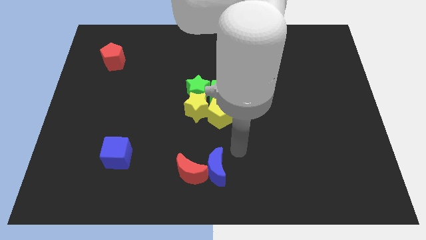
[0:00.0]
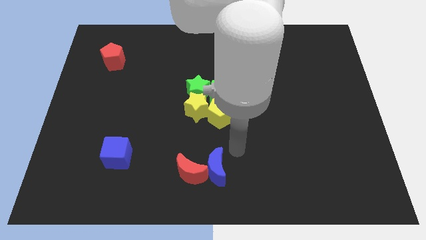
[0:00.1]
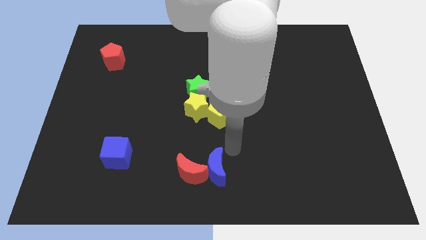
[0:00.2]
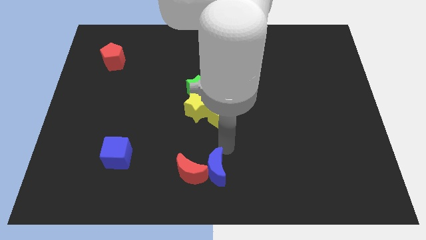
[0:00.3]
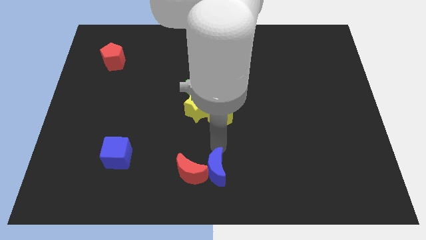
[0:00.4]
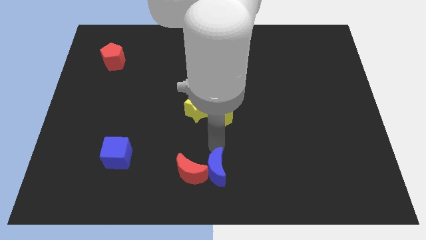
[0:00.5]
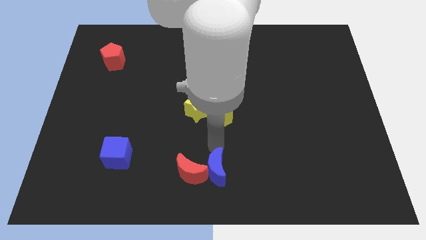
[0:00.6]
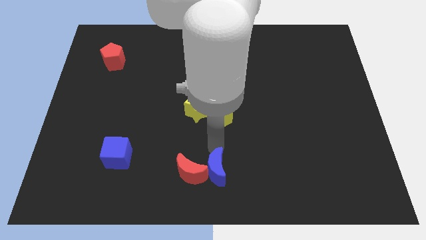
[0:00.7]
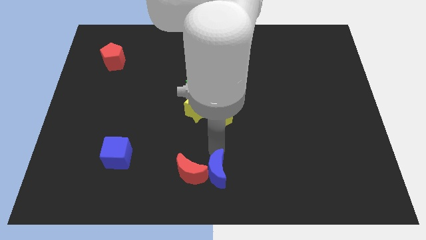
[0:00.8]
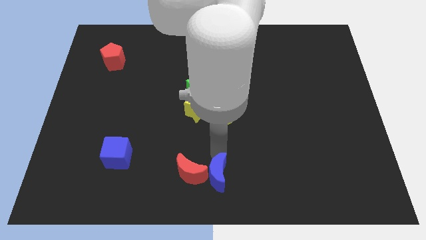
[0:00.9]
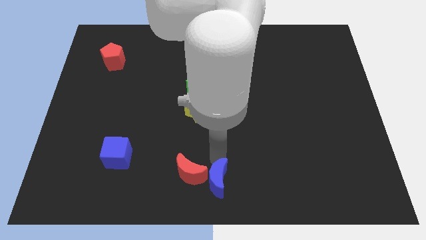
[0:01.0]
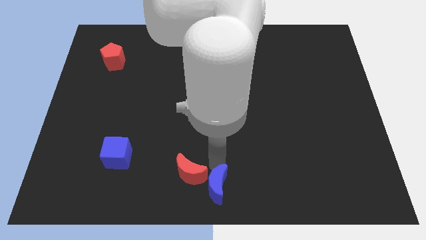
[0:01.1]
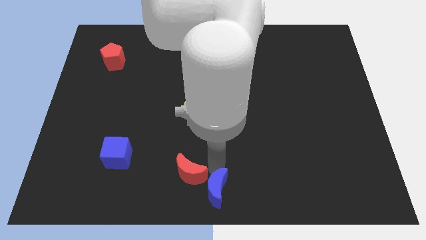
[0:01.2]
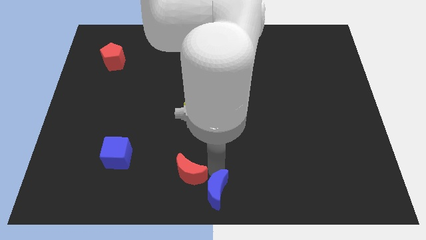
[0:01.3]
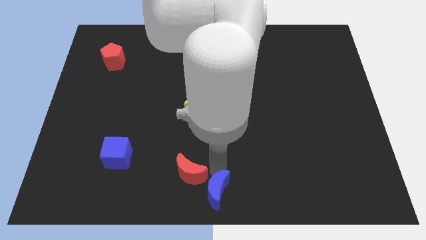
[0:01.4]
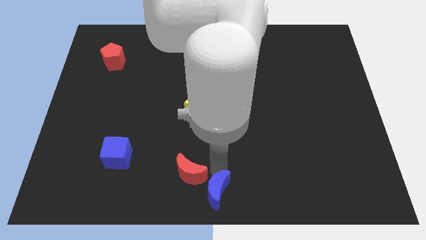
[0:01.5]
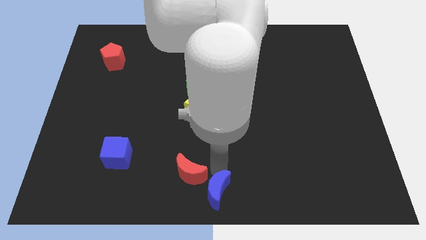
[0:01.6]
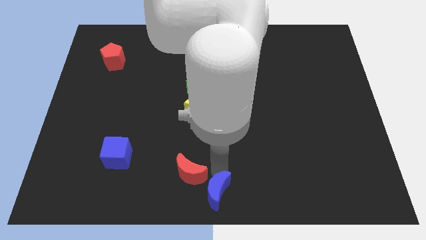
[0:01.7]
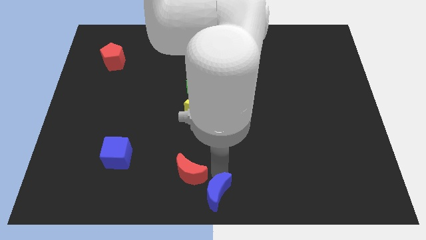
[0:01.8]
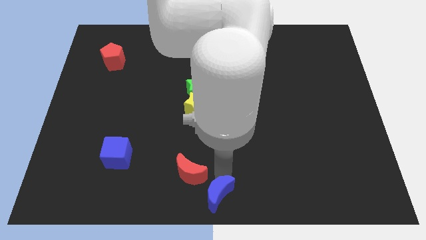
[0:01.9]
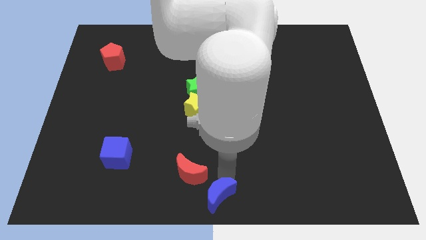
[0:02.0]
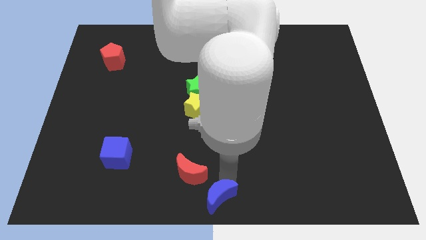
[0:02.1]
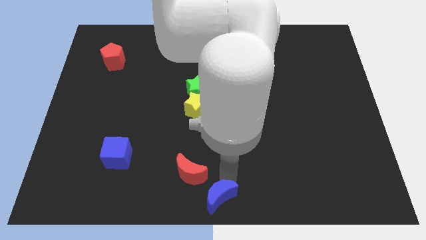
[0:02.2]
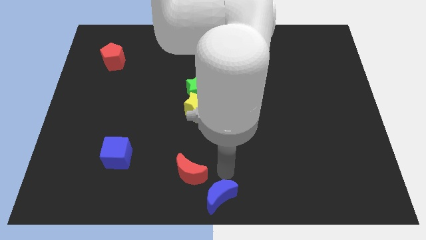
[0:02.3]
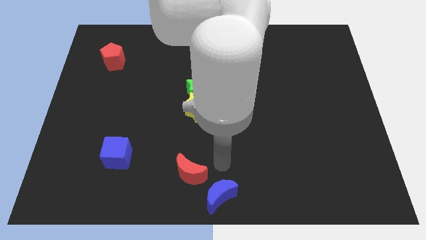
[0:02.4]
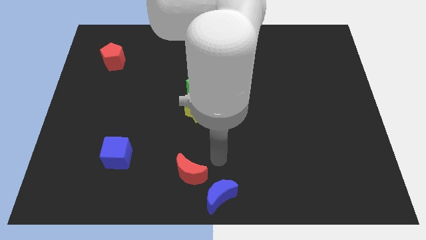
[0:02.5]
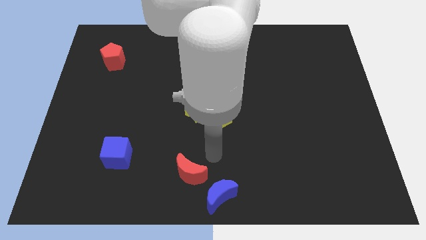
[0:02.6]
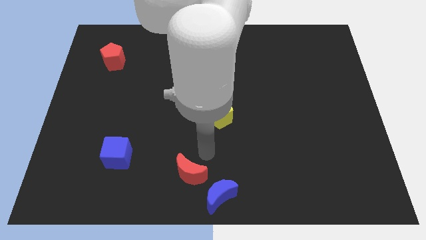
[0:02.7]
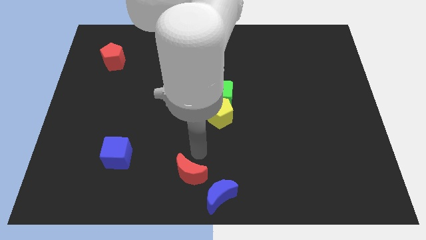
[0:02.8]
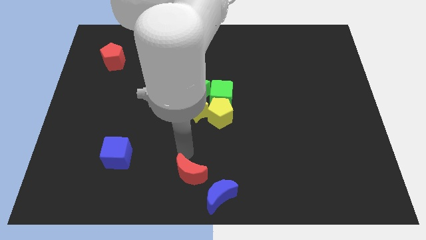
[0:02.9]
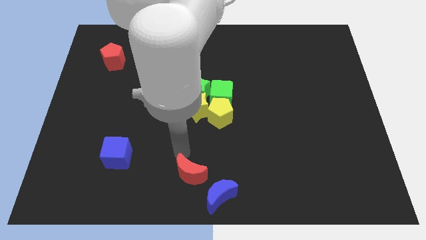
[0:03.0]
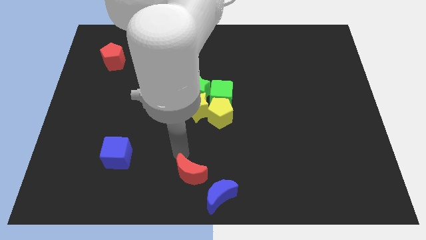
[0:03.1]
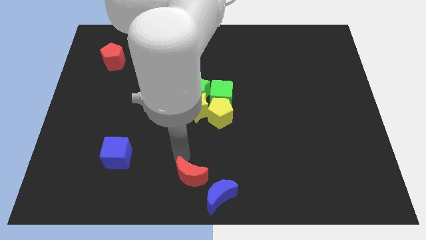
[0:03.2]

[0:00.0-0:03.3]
slightly push the blue moon to the bottom center

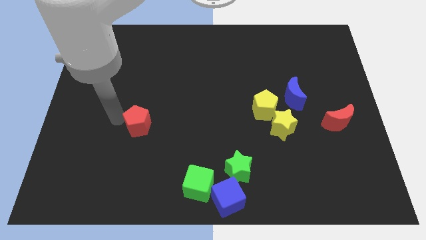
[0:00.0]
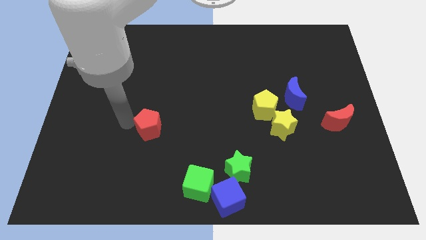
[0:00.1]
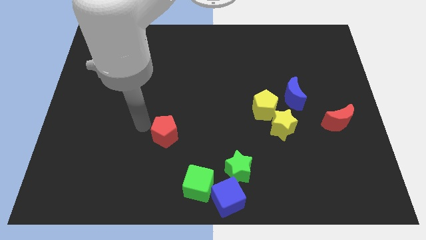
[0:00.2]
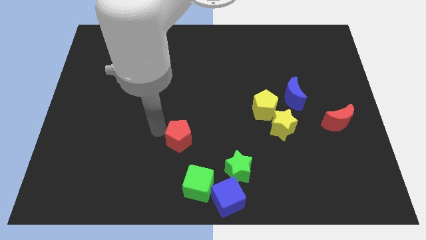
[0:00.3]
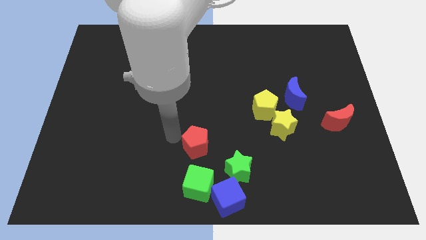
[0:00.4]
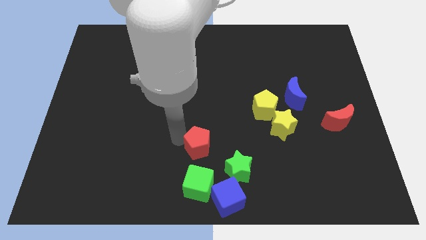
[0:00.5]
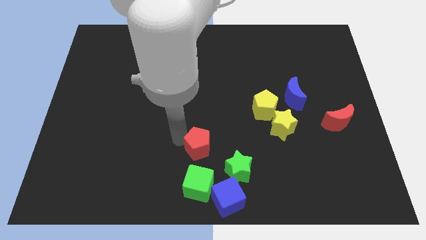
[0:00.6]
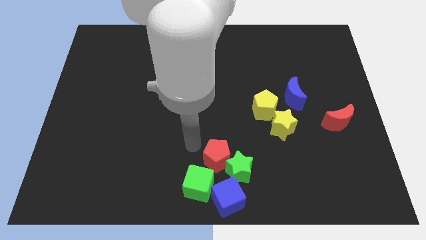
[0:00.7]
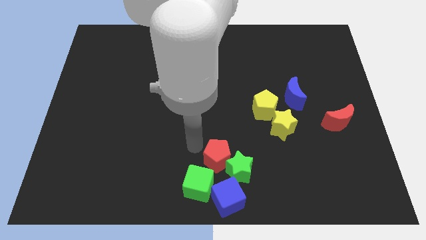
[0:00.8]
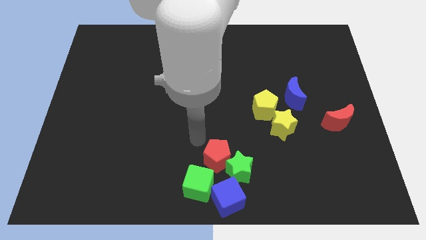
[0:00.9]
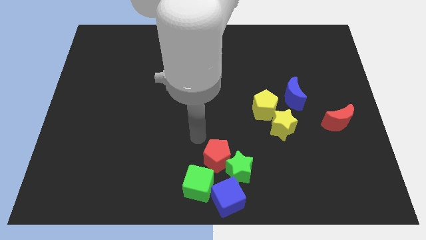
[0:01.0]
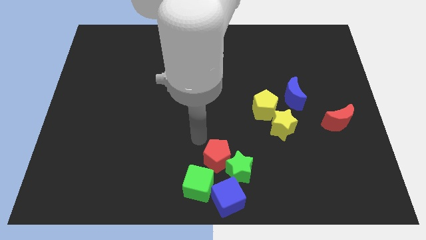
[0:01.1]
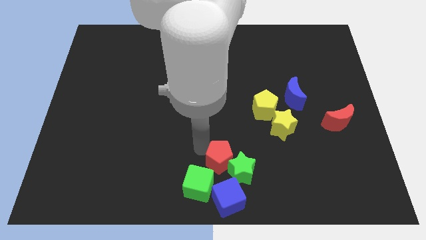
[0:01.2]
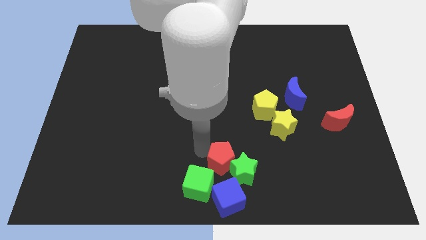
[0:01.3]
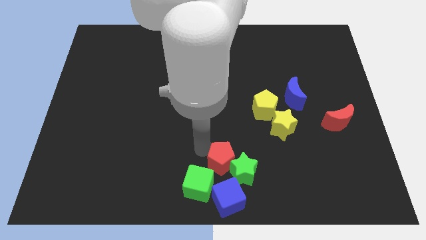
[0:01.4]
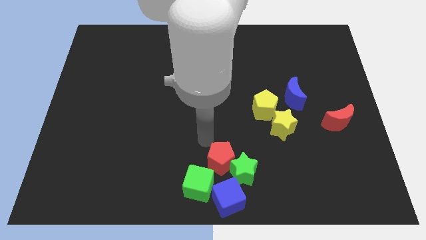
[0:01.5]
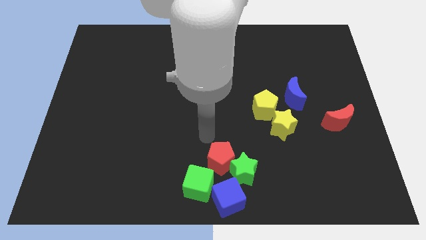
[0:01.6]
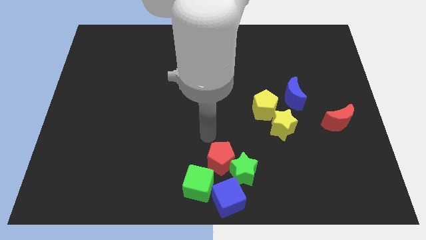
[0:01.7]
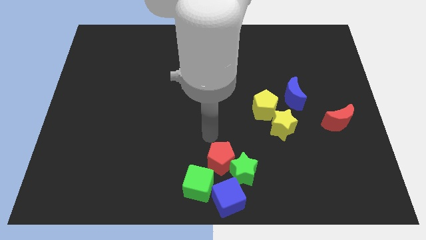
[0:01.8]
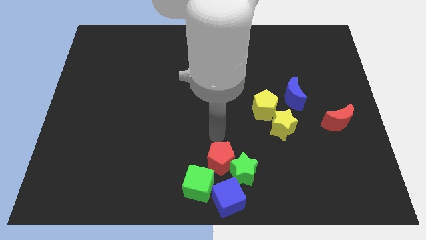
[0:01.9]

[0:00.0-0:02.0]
push the red pentagon into the green star

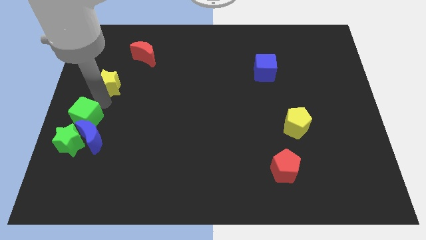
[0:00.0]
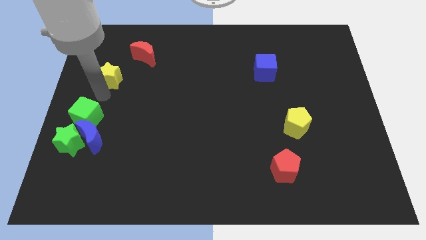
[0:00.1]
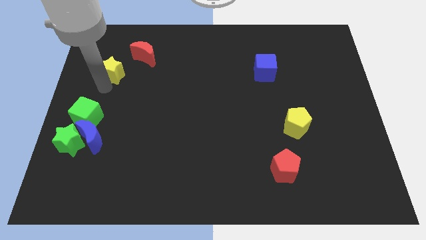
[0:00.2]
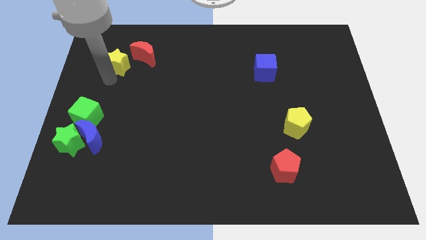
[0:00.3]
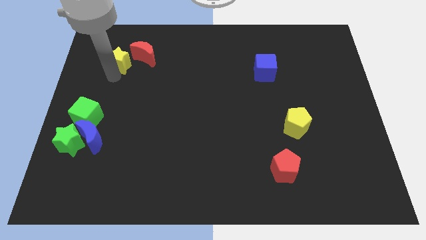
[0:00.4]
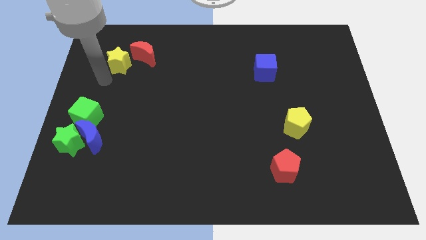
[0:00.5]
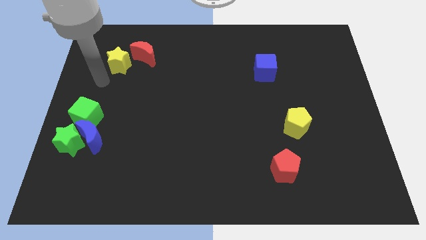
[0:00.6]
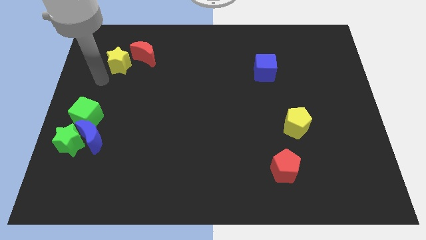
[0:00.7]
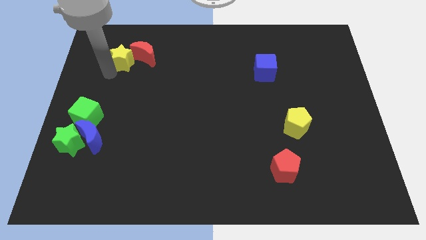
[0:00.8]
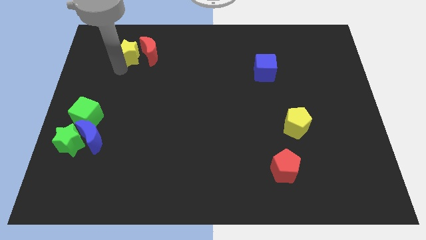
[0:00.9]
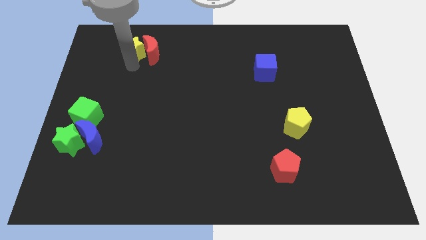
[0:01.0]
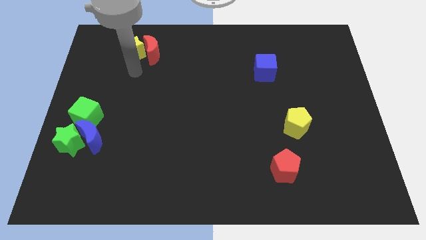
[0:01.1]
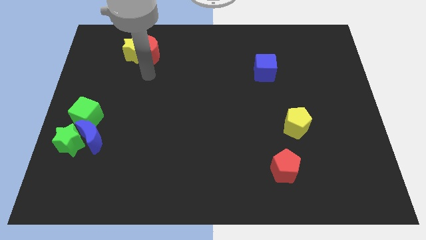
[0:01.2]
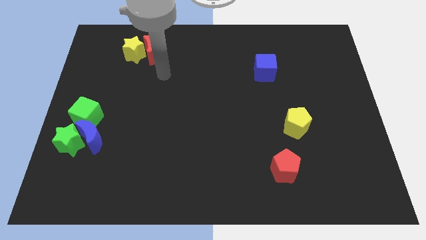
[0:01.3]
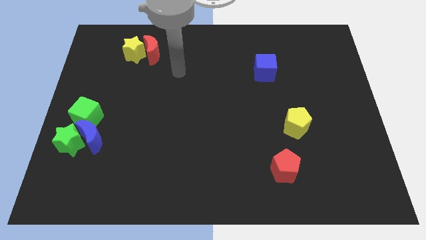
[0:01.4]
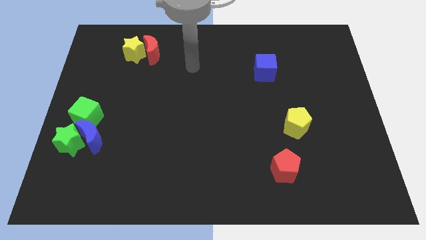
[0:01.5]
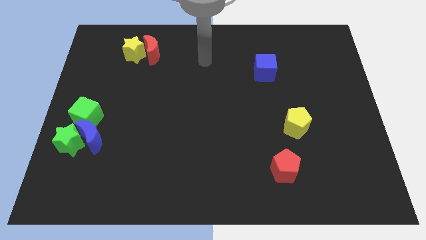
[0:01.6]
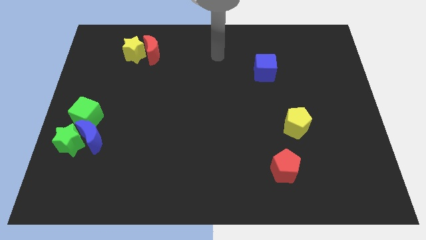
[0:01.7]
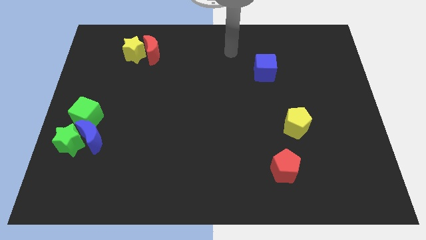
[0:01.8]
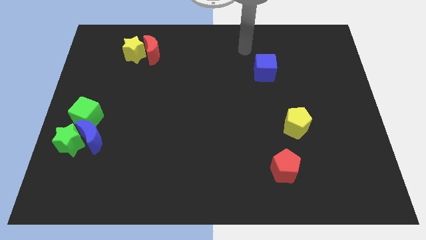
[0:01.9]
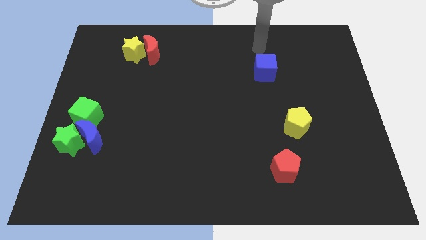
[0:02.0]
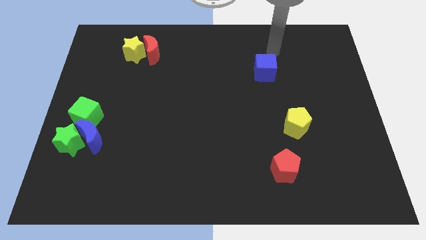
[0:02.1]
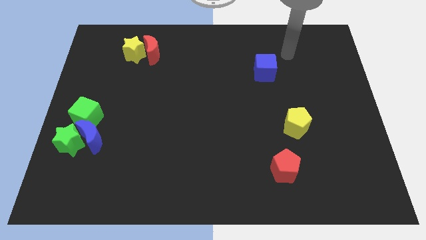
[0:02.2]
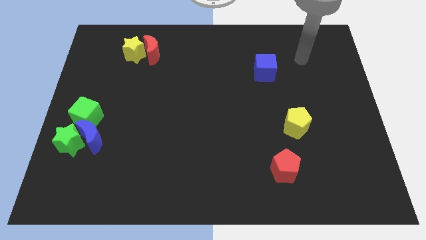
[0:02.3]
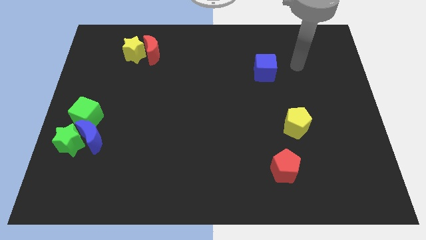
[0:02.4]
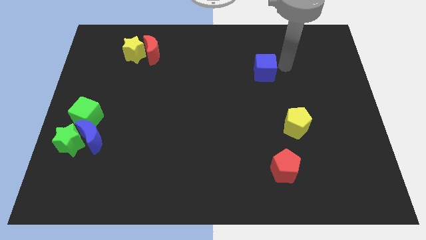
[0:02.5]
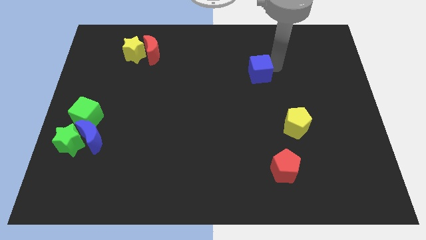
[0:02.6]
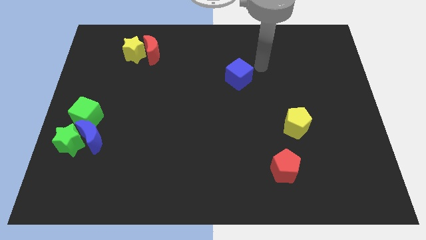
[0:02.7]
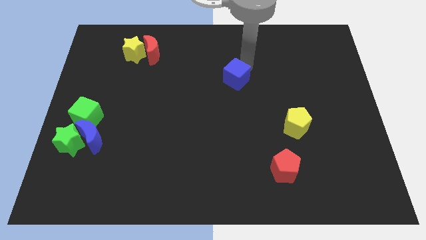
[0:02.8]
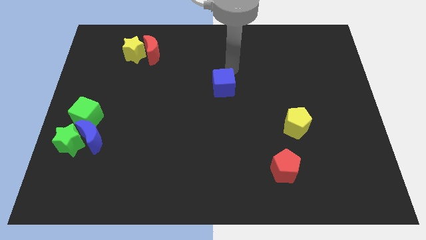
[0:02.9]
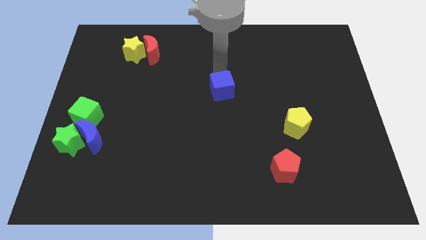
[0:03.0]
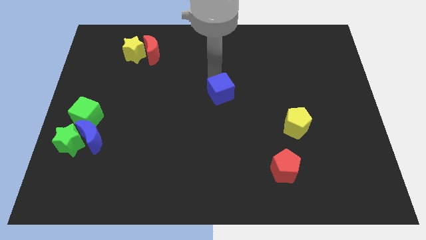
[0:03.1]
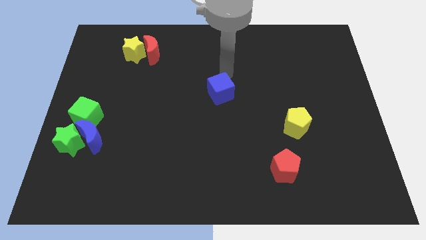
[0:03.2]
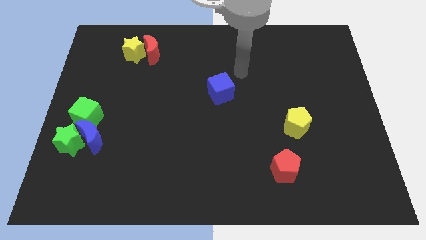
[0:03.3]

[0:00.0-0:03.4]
place the yellow star to the left of red moon

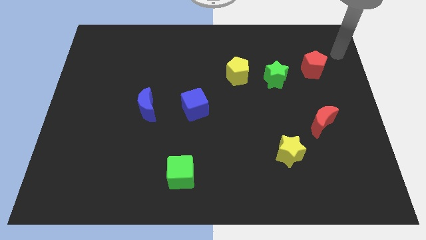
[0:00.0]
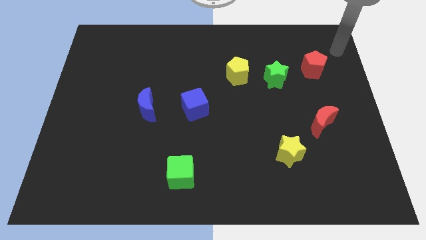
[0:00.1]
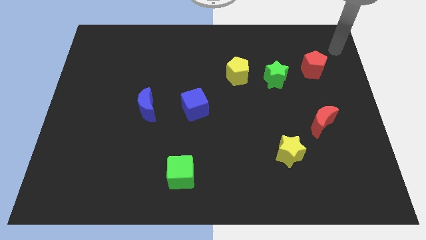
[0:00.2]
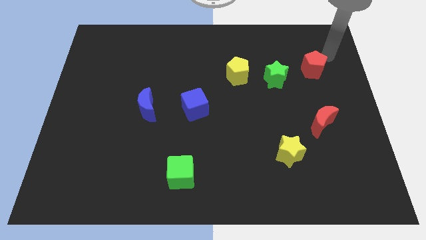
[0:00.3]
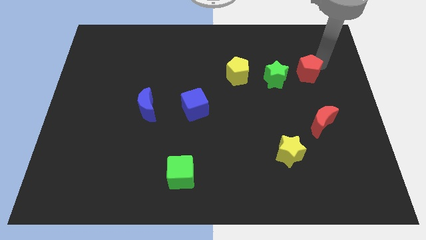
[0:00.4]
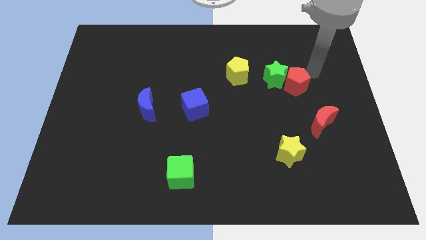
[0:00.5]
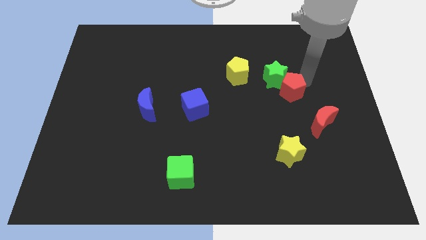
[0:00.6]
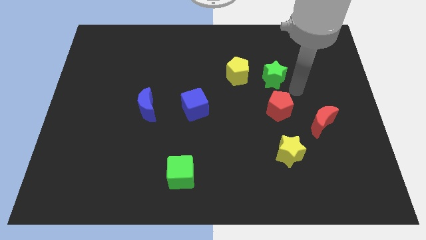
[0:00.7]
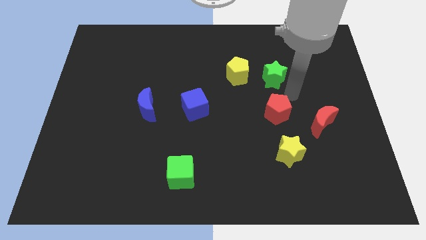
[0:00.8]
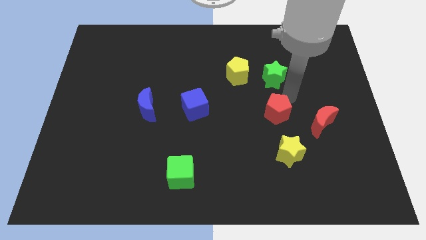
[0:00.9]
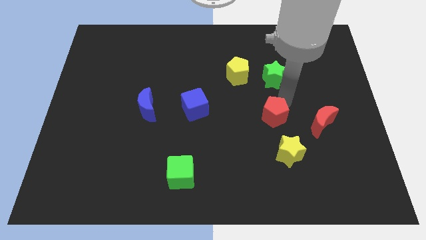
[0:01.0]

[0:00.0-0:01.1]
place the red pentagon below the green star
